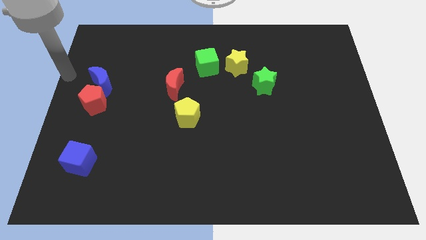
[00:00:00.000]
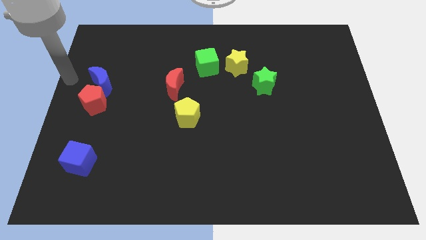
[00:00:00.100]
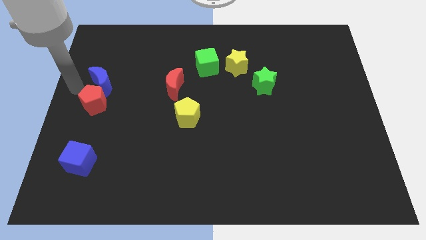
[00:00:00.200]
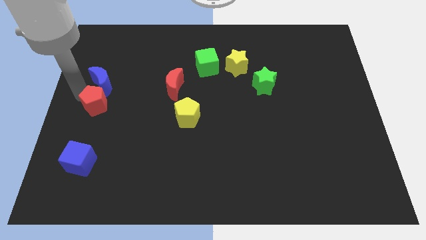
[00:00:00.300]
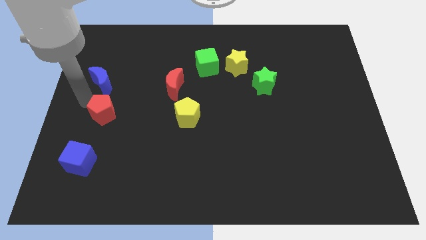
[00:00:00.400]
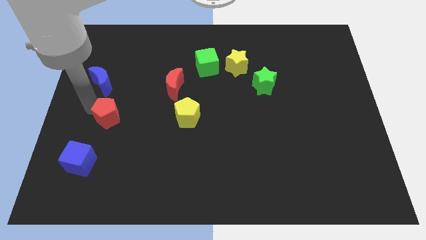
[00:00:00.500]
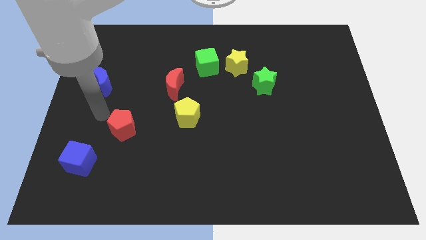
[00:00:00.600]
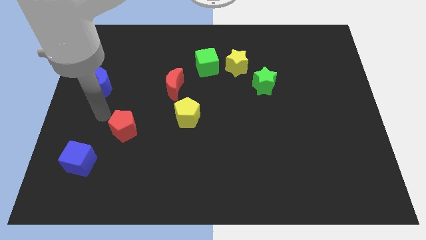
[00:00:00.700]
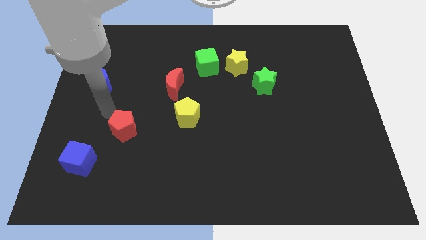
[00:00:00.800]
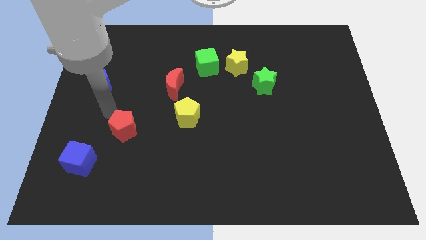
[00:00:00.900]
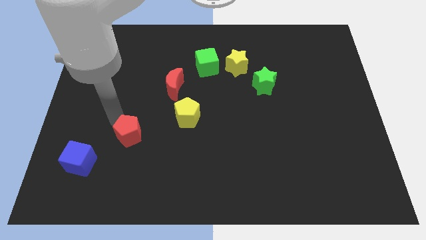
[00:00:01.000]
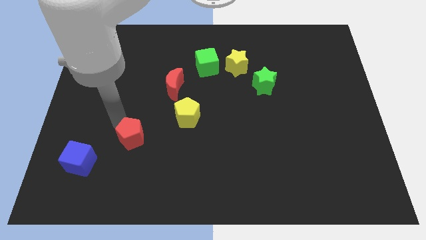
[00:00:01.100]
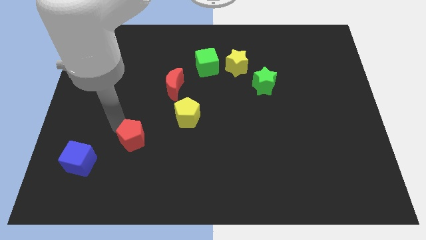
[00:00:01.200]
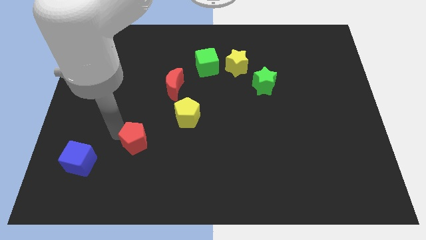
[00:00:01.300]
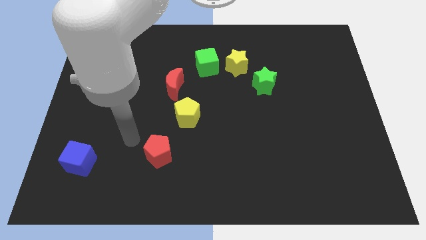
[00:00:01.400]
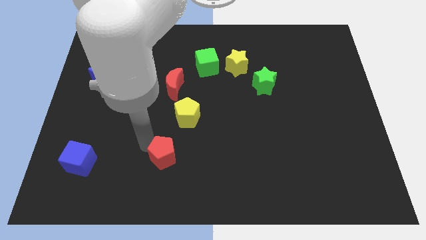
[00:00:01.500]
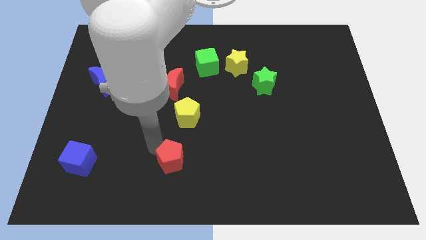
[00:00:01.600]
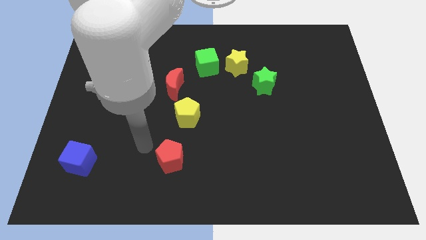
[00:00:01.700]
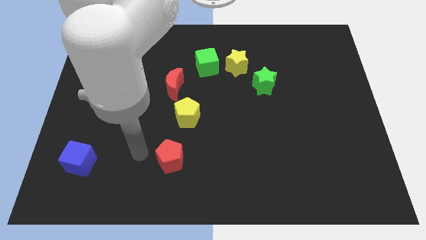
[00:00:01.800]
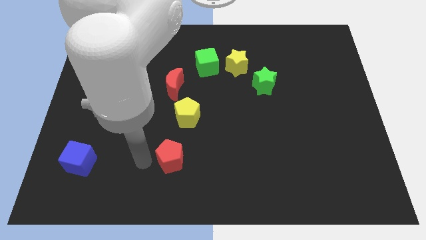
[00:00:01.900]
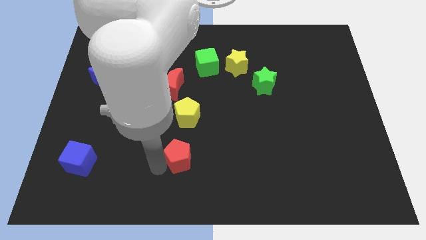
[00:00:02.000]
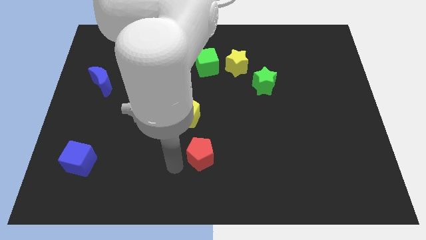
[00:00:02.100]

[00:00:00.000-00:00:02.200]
move the red pentagon to the bottom side of the yellow pentagon

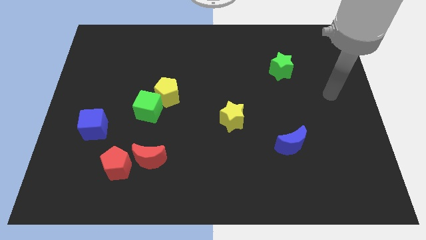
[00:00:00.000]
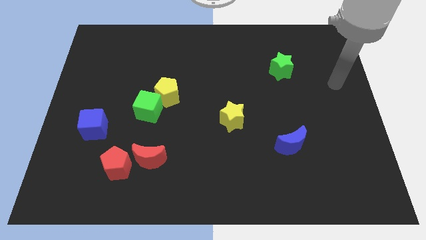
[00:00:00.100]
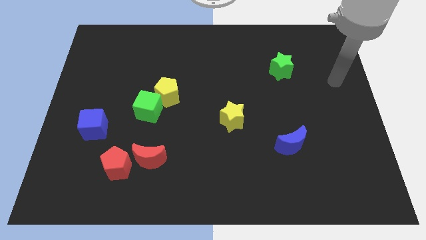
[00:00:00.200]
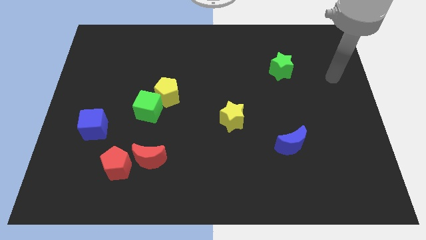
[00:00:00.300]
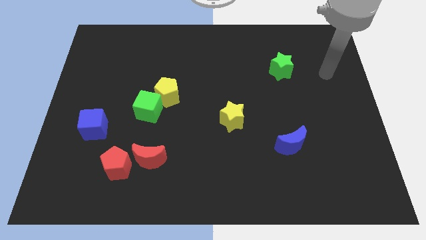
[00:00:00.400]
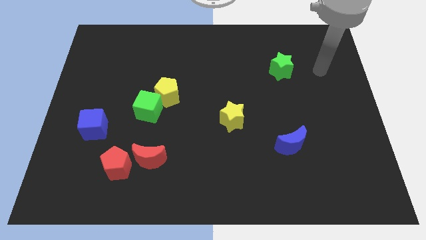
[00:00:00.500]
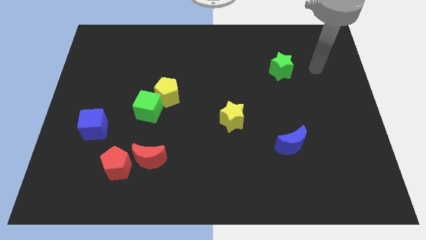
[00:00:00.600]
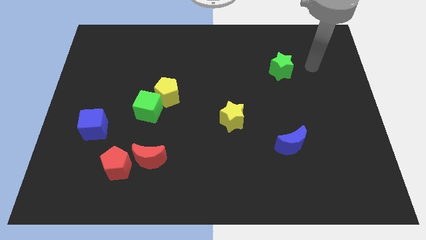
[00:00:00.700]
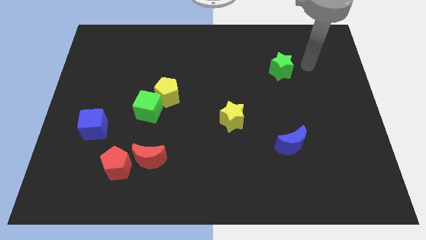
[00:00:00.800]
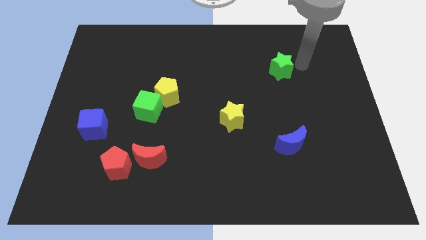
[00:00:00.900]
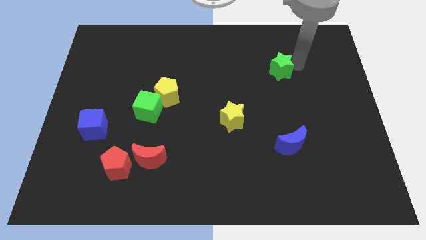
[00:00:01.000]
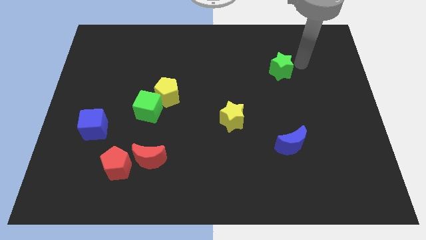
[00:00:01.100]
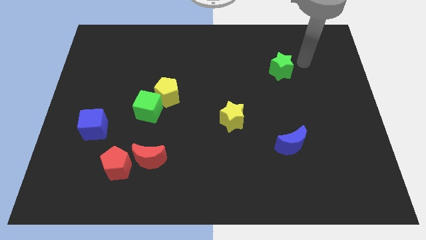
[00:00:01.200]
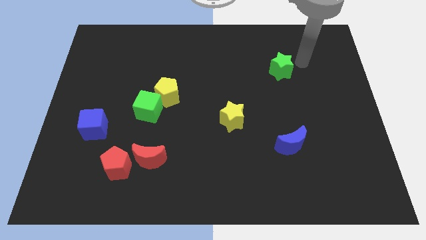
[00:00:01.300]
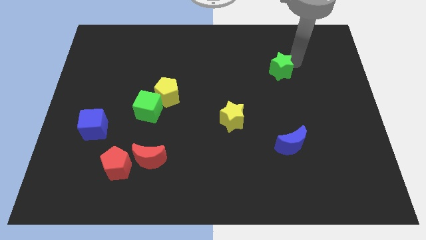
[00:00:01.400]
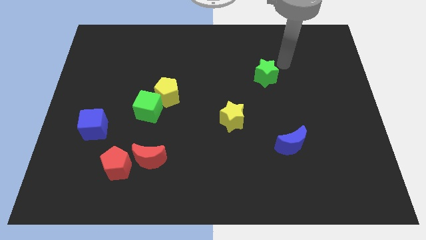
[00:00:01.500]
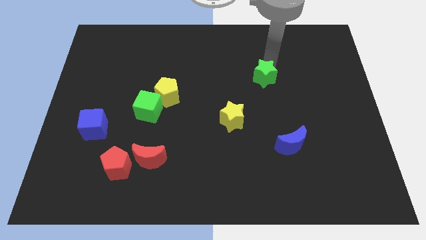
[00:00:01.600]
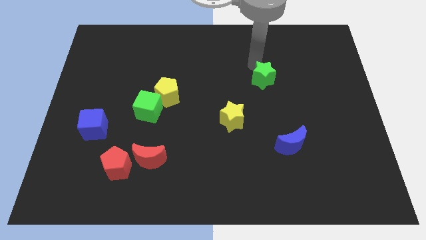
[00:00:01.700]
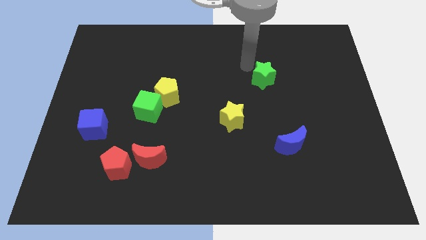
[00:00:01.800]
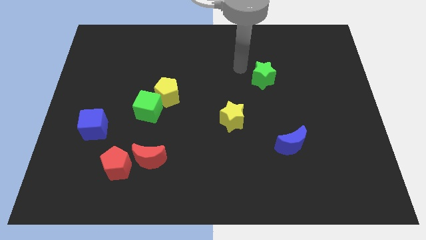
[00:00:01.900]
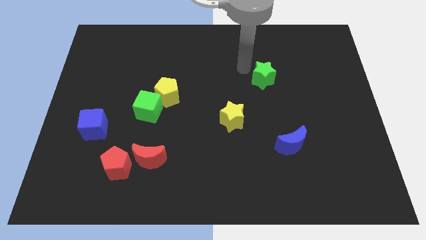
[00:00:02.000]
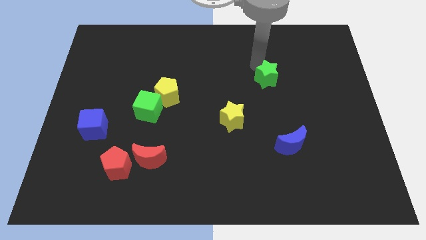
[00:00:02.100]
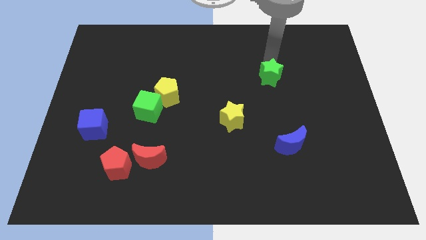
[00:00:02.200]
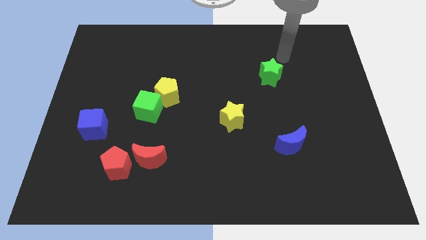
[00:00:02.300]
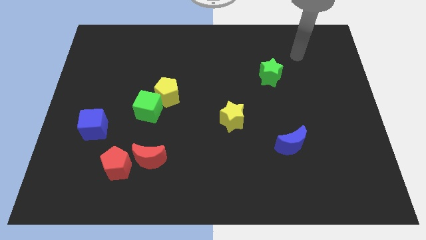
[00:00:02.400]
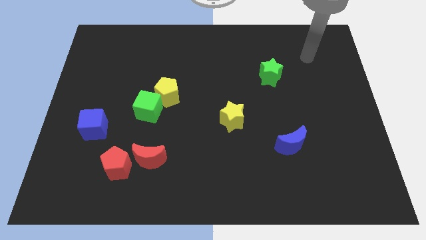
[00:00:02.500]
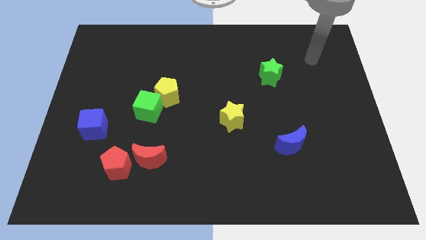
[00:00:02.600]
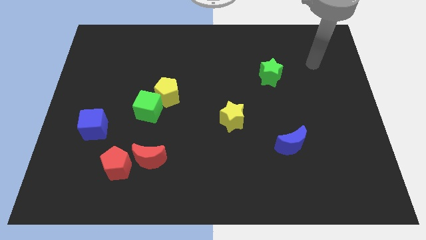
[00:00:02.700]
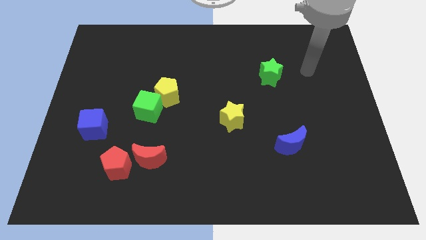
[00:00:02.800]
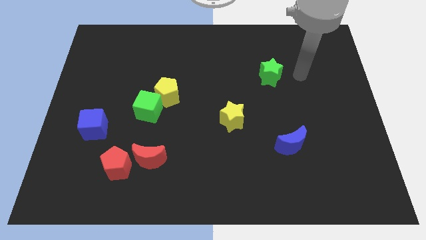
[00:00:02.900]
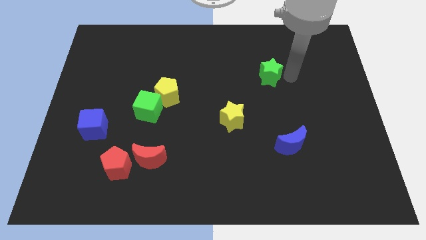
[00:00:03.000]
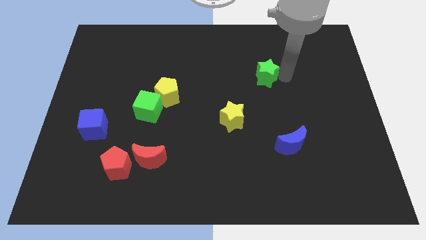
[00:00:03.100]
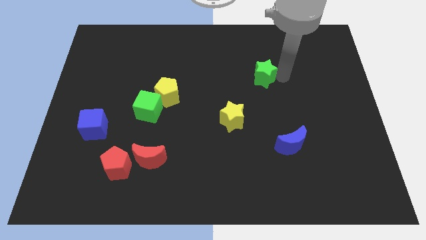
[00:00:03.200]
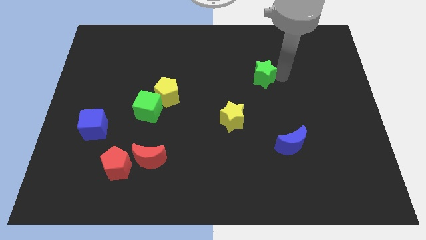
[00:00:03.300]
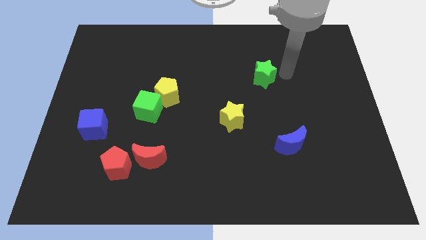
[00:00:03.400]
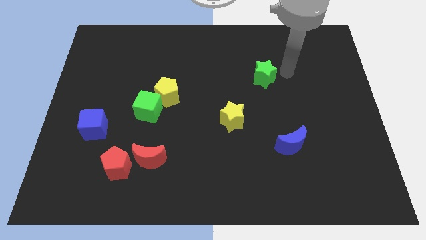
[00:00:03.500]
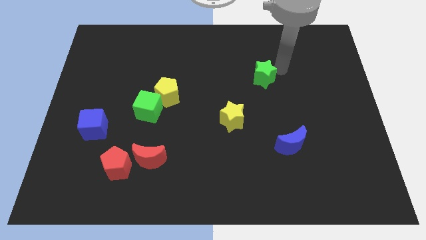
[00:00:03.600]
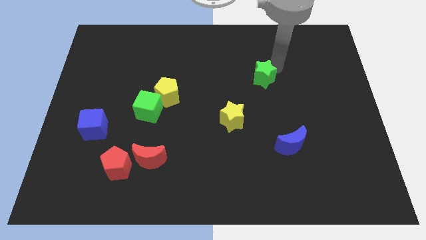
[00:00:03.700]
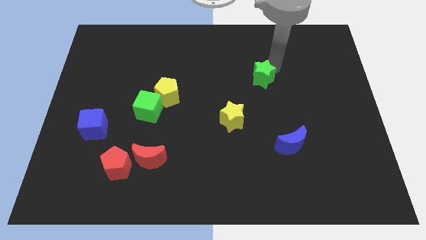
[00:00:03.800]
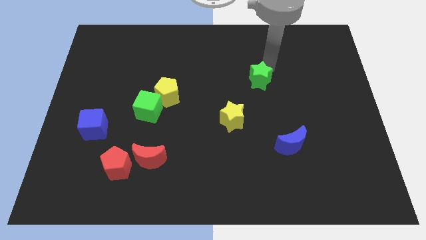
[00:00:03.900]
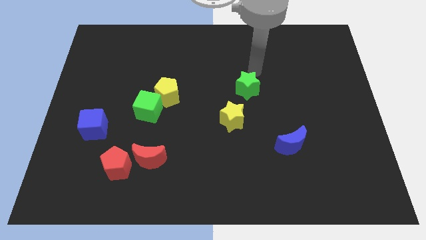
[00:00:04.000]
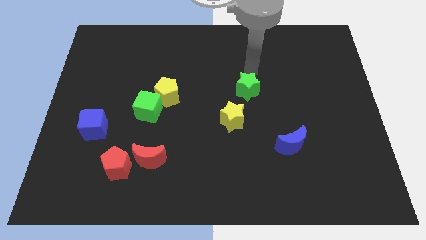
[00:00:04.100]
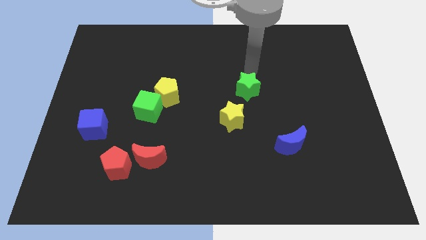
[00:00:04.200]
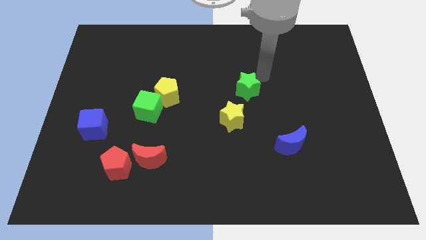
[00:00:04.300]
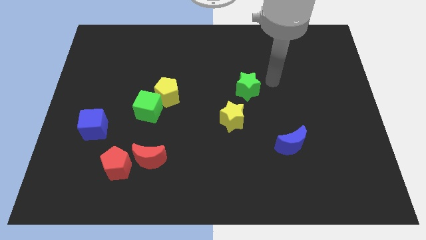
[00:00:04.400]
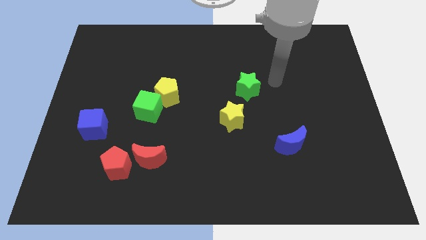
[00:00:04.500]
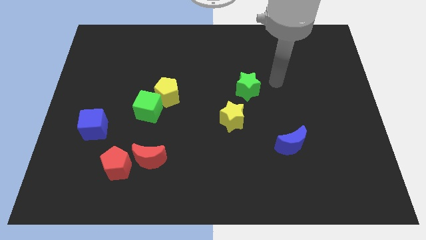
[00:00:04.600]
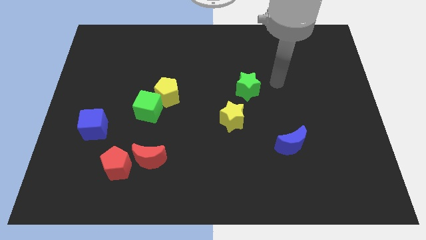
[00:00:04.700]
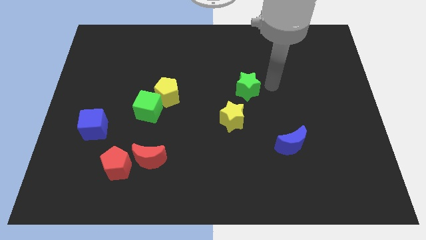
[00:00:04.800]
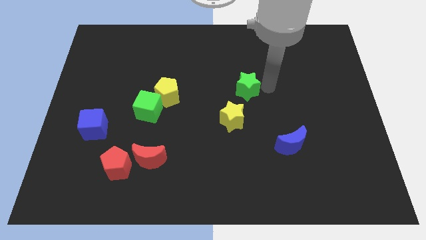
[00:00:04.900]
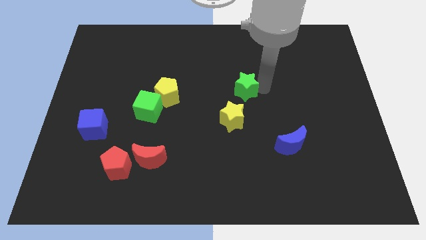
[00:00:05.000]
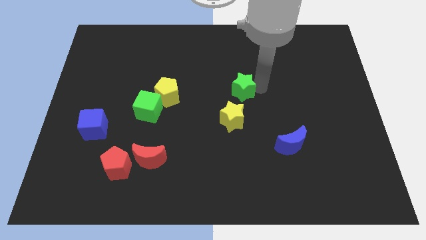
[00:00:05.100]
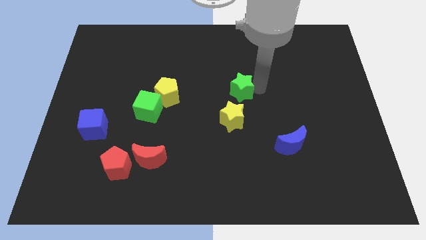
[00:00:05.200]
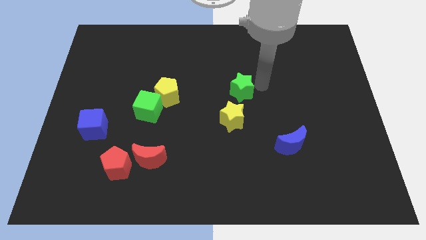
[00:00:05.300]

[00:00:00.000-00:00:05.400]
place the green star above the yellow star

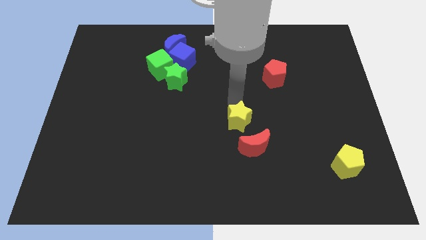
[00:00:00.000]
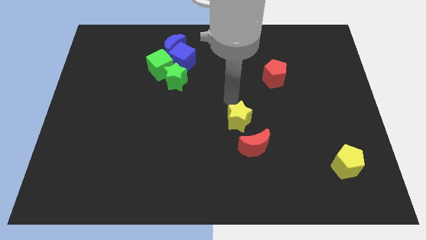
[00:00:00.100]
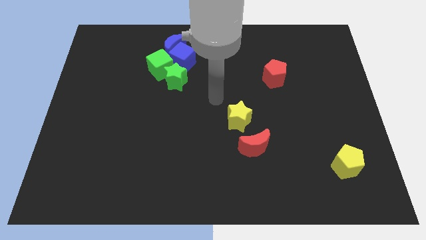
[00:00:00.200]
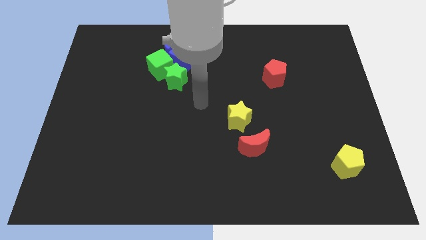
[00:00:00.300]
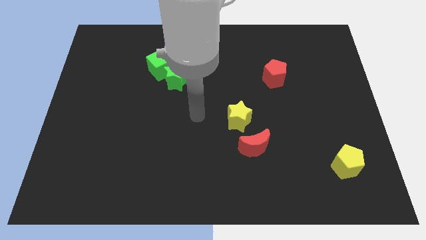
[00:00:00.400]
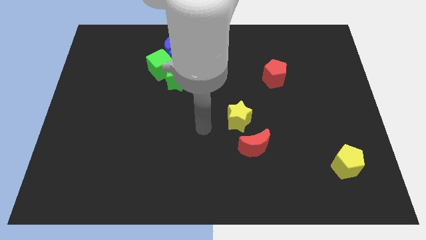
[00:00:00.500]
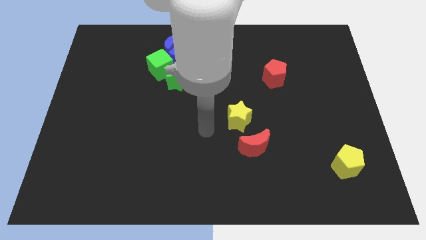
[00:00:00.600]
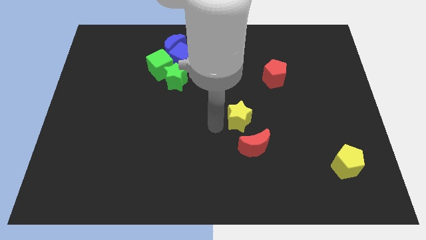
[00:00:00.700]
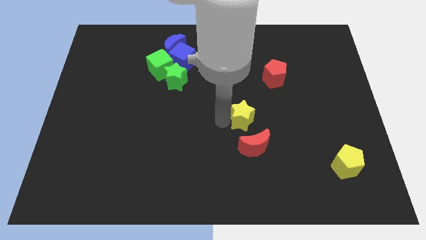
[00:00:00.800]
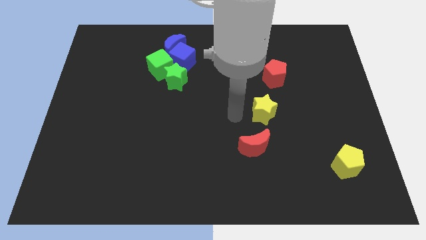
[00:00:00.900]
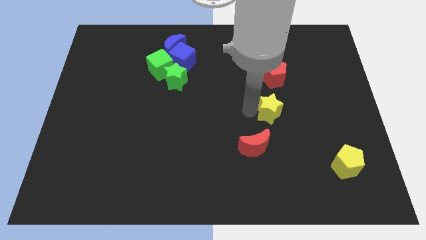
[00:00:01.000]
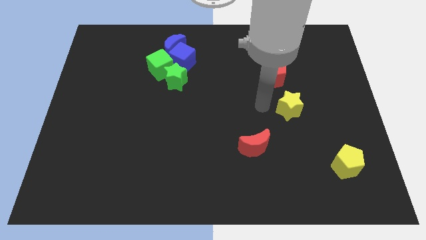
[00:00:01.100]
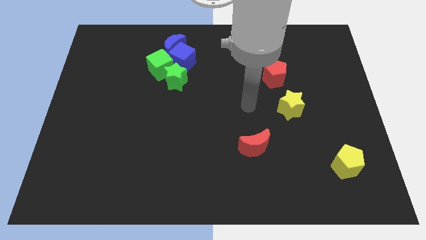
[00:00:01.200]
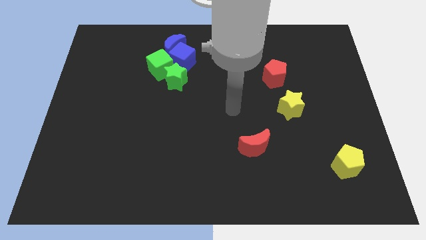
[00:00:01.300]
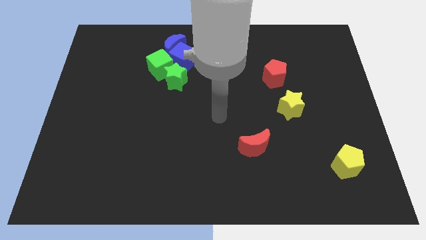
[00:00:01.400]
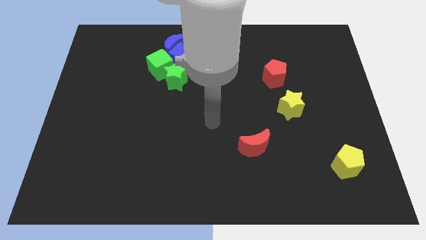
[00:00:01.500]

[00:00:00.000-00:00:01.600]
push the yellow star towards the right side of the board
